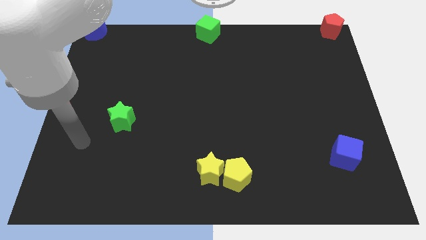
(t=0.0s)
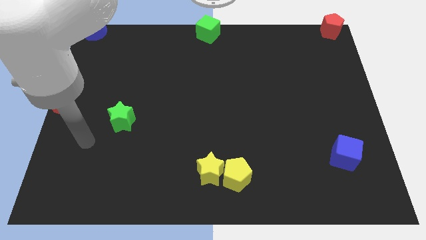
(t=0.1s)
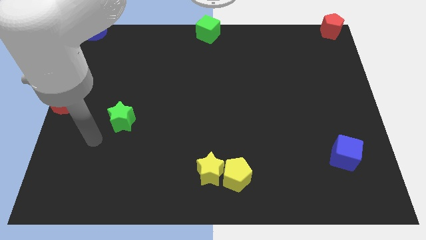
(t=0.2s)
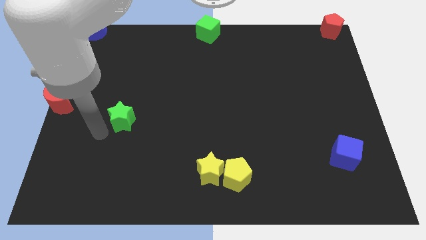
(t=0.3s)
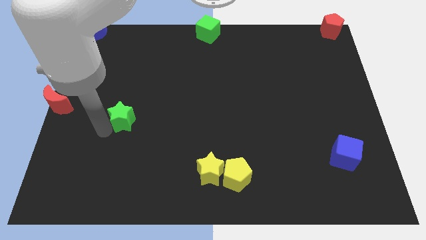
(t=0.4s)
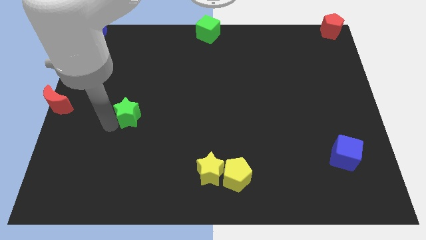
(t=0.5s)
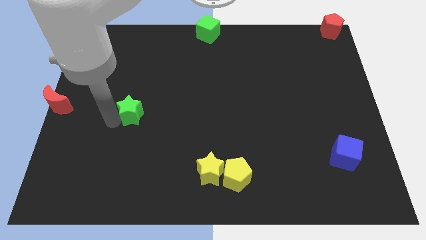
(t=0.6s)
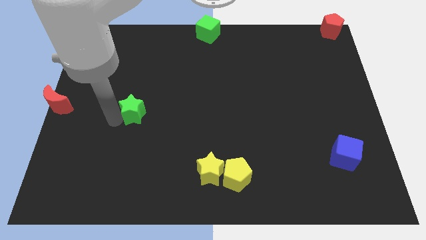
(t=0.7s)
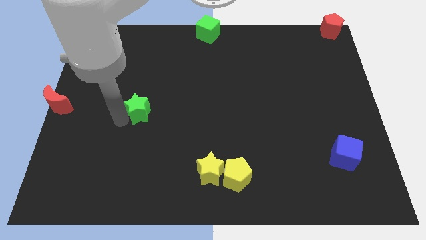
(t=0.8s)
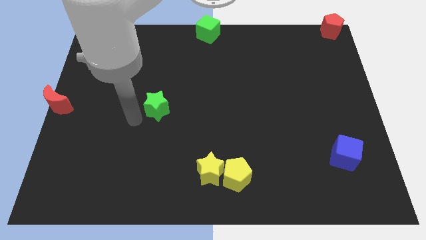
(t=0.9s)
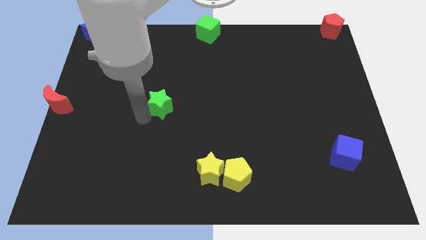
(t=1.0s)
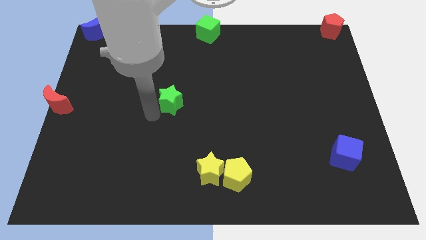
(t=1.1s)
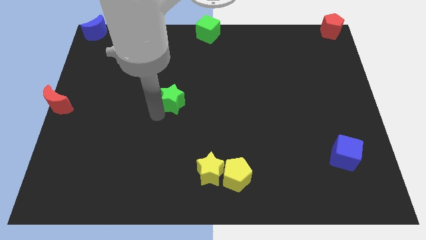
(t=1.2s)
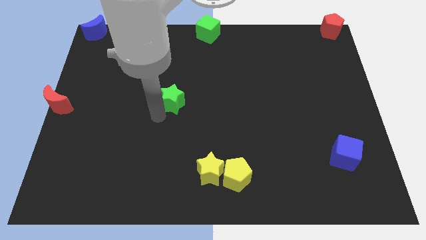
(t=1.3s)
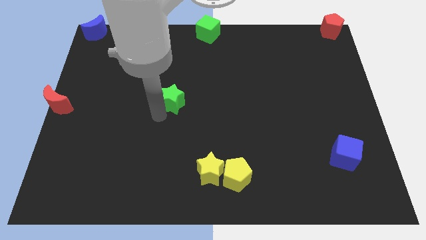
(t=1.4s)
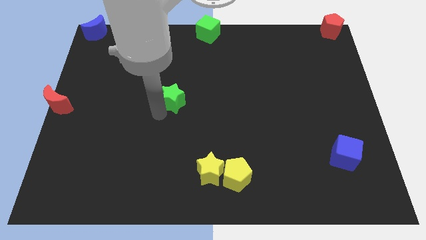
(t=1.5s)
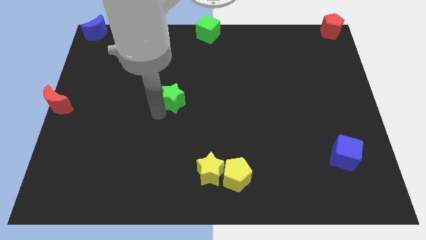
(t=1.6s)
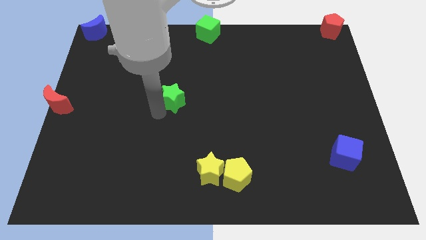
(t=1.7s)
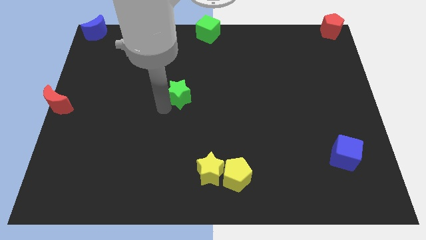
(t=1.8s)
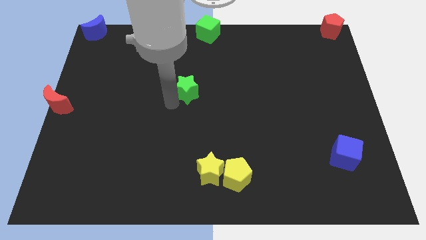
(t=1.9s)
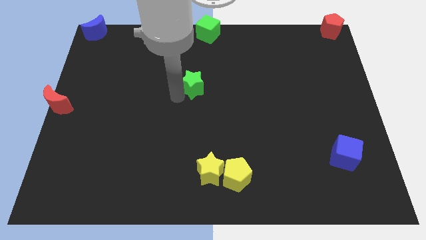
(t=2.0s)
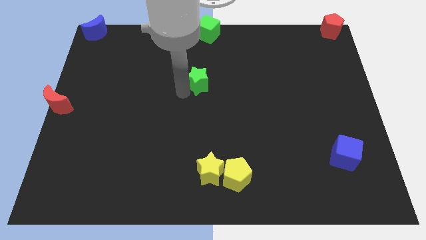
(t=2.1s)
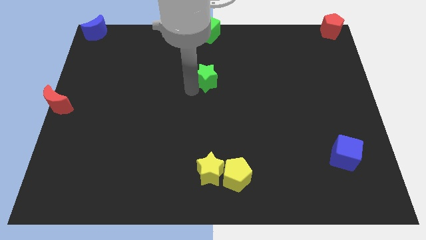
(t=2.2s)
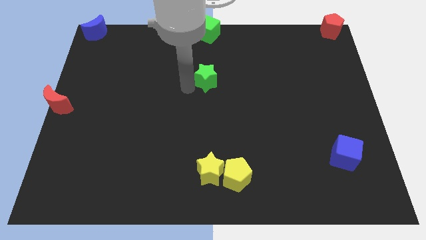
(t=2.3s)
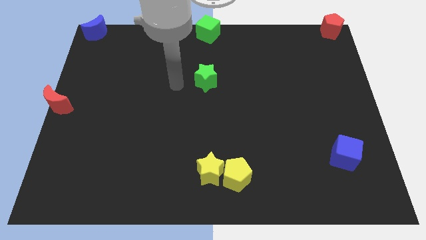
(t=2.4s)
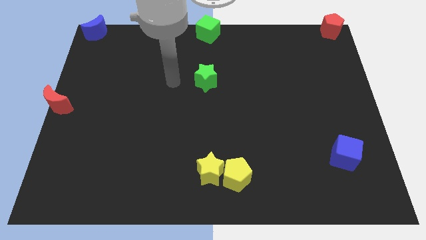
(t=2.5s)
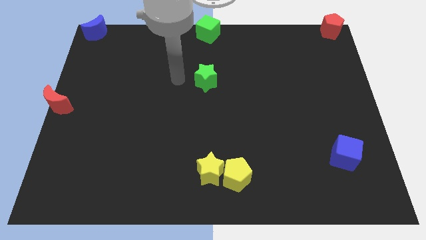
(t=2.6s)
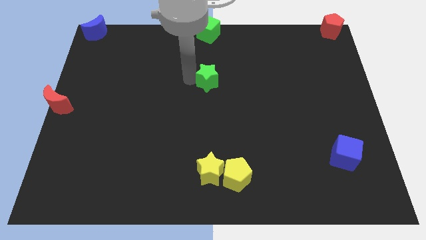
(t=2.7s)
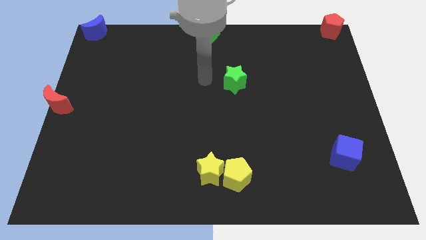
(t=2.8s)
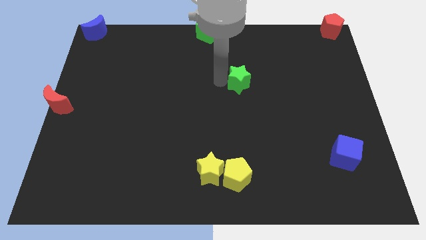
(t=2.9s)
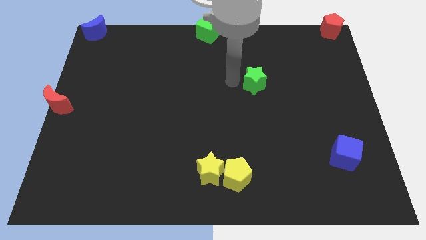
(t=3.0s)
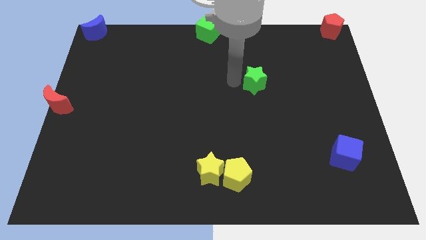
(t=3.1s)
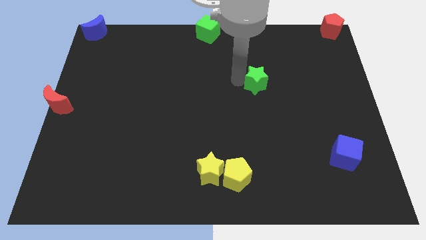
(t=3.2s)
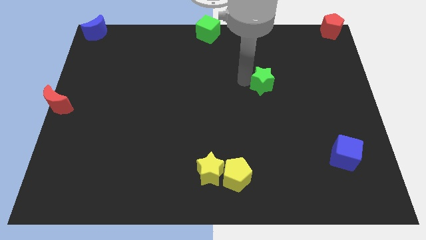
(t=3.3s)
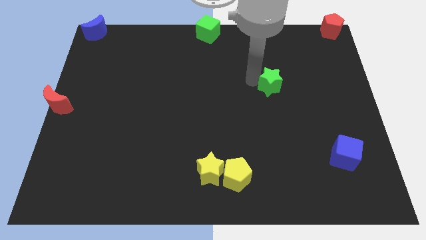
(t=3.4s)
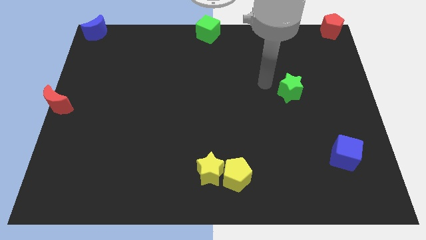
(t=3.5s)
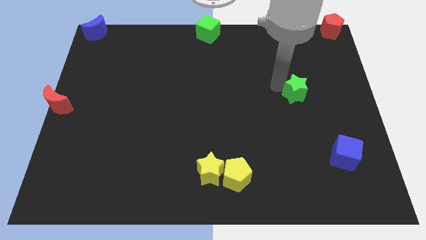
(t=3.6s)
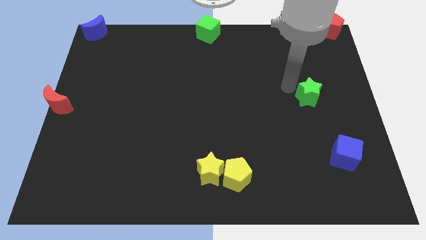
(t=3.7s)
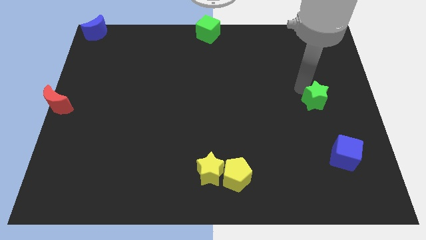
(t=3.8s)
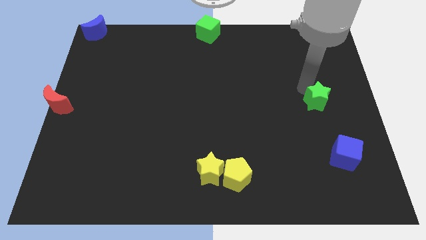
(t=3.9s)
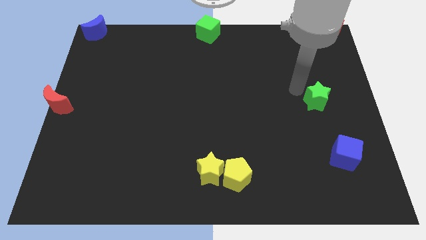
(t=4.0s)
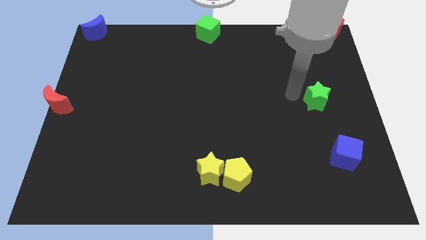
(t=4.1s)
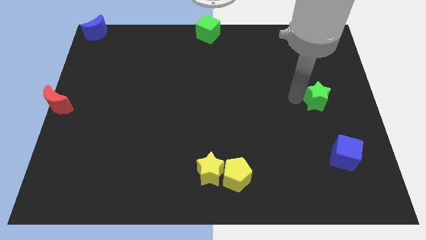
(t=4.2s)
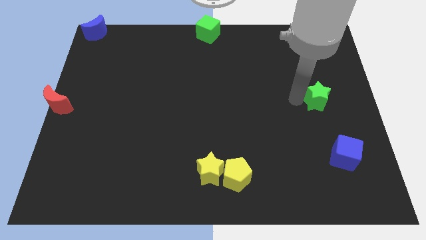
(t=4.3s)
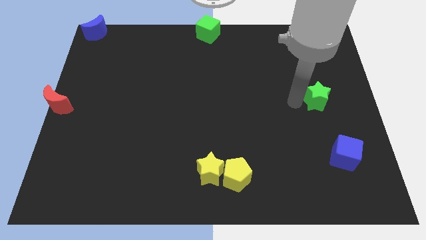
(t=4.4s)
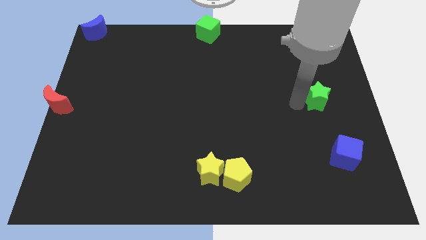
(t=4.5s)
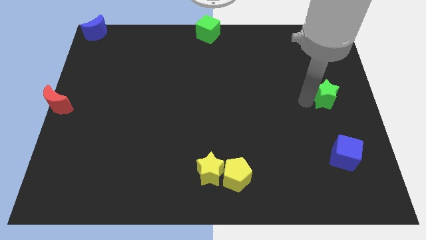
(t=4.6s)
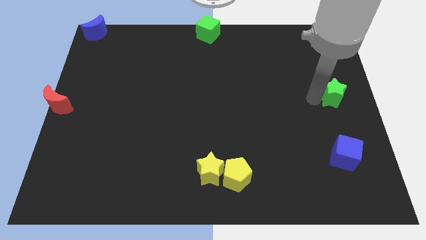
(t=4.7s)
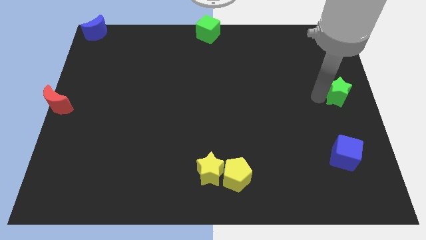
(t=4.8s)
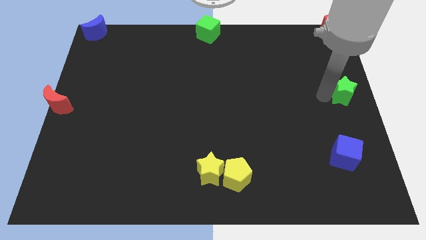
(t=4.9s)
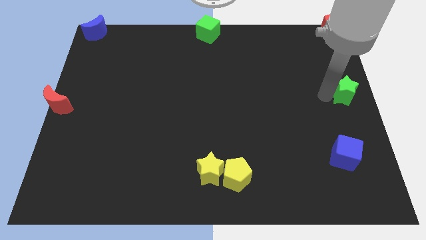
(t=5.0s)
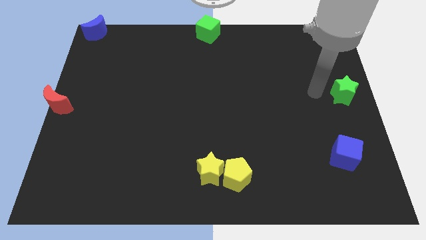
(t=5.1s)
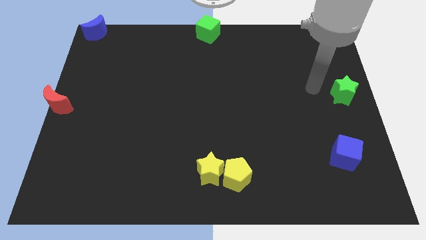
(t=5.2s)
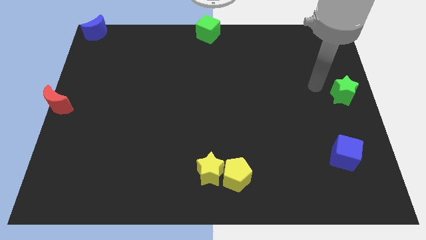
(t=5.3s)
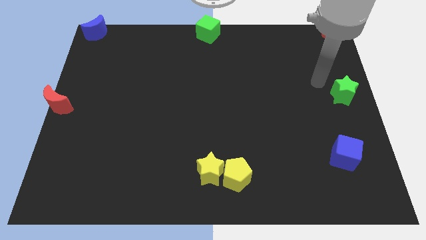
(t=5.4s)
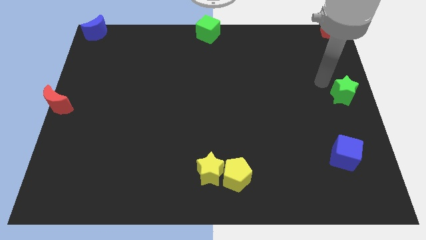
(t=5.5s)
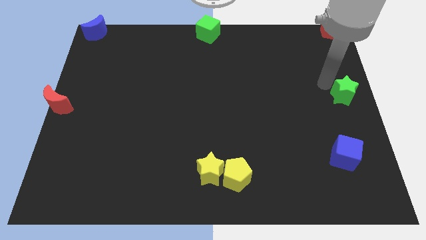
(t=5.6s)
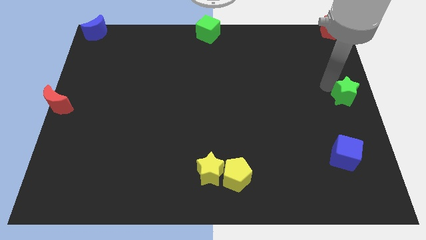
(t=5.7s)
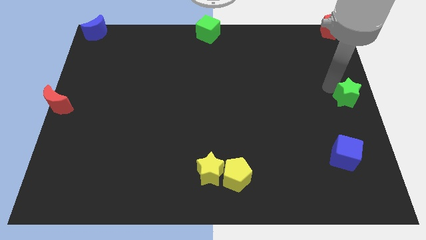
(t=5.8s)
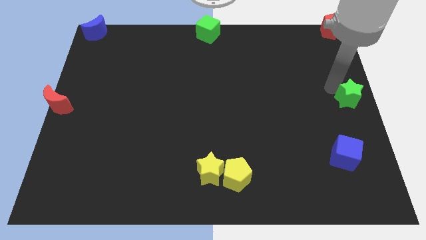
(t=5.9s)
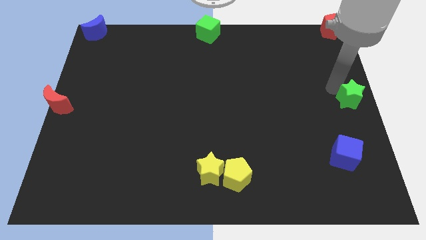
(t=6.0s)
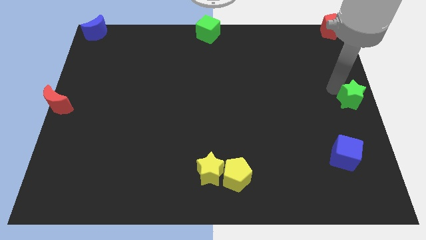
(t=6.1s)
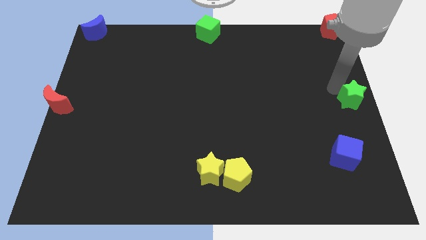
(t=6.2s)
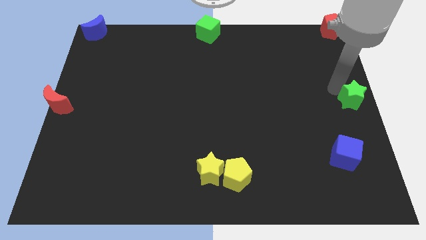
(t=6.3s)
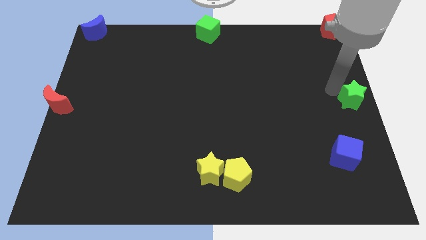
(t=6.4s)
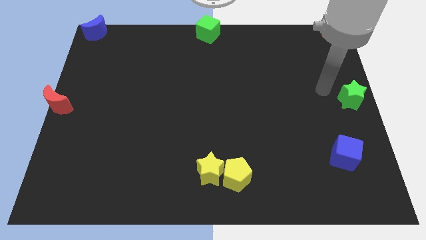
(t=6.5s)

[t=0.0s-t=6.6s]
drag the green star towards the middle right of the board

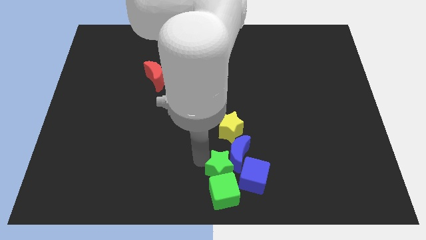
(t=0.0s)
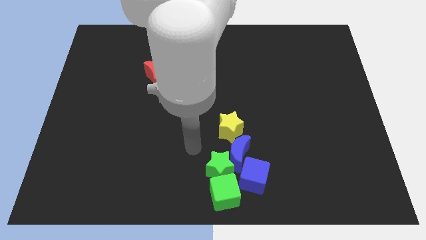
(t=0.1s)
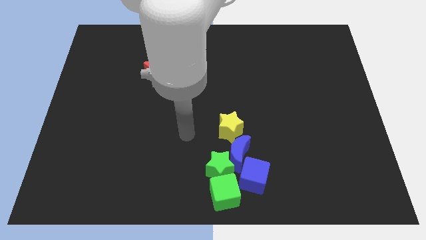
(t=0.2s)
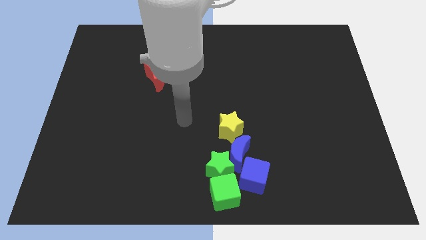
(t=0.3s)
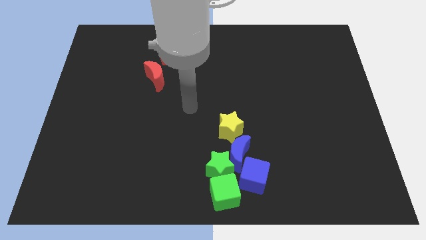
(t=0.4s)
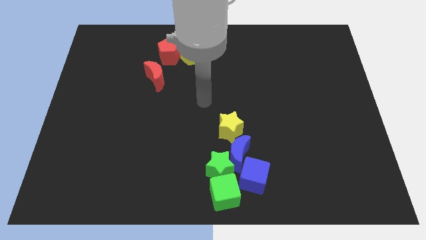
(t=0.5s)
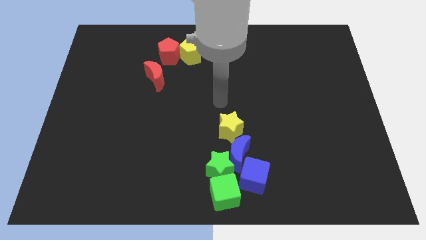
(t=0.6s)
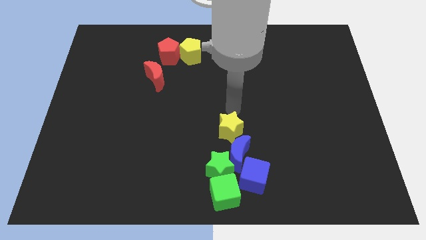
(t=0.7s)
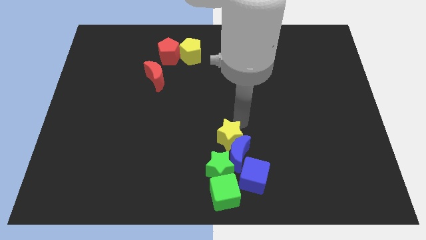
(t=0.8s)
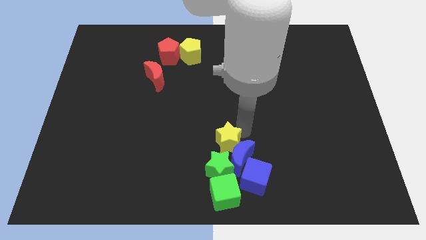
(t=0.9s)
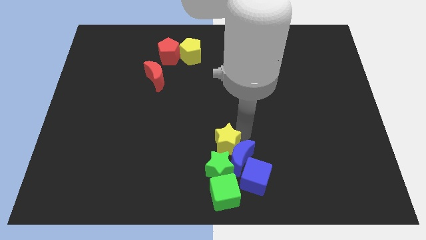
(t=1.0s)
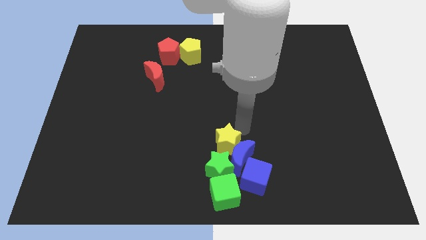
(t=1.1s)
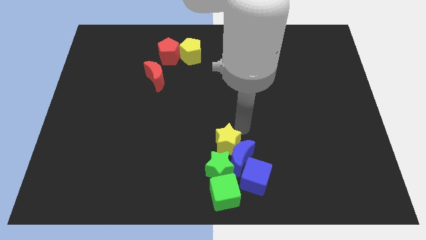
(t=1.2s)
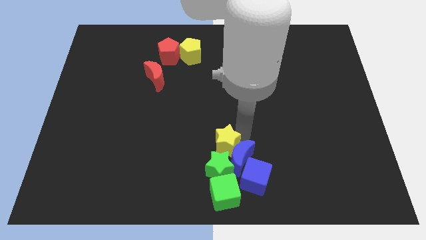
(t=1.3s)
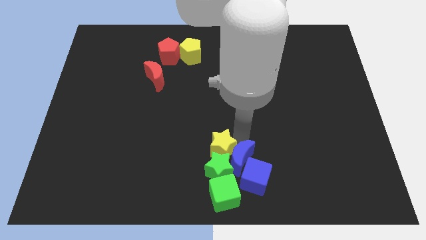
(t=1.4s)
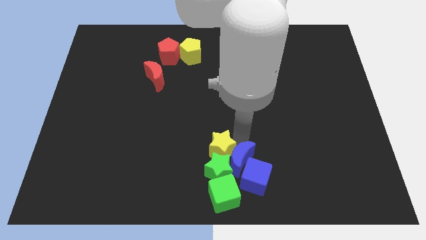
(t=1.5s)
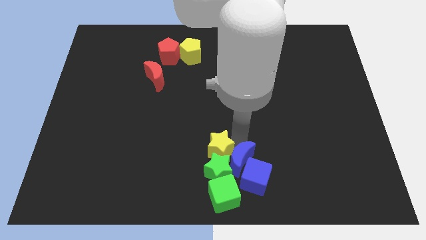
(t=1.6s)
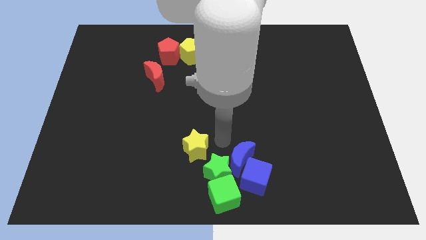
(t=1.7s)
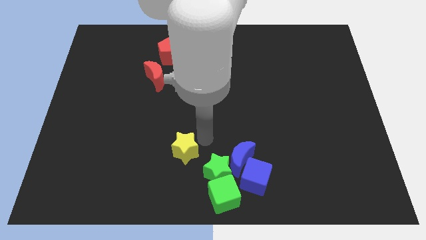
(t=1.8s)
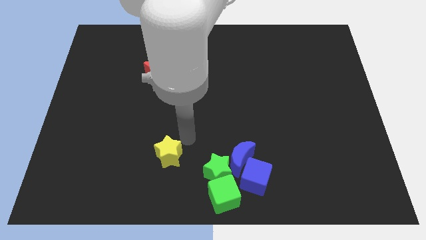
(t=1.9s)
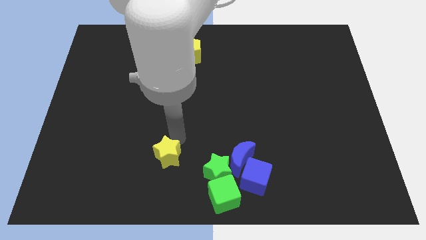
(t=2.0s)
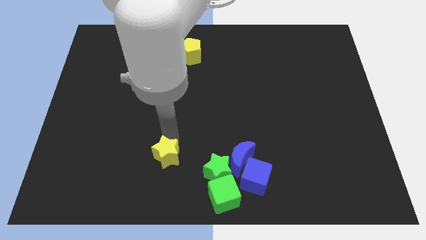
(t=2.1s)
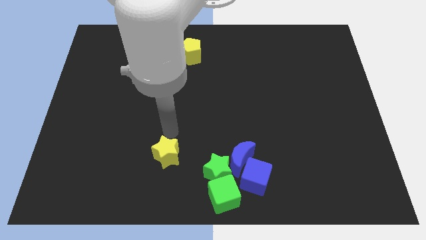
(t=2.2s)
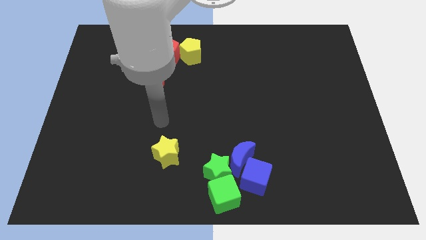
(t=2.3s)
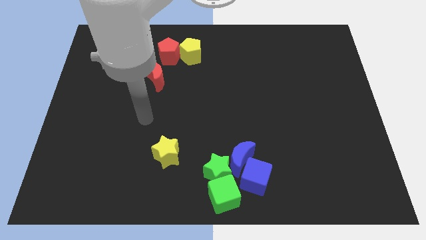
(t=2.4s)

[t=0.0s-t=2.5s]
separate the yellow star from the group of blocks which are at the bottom center
